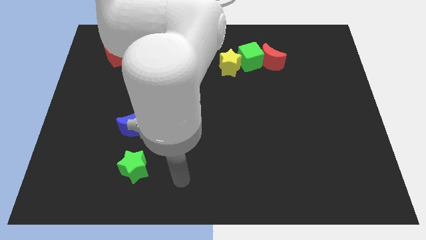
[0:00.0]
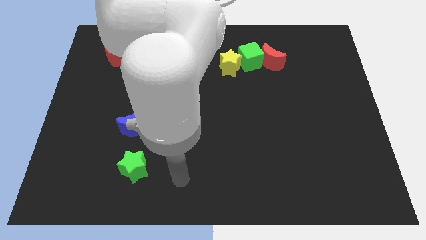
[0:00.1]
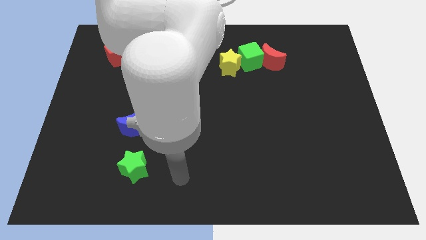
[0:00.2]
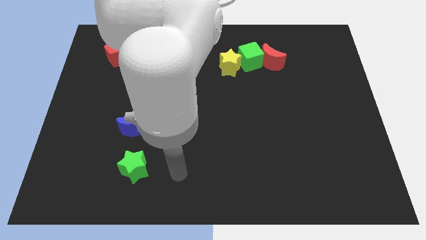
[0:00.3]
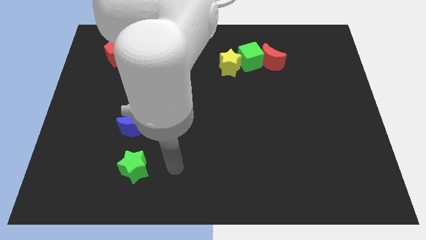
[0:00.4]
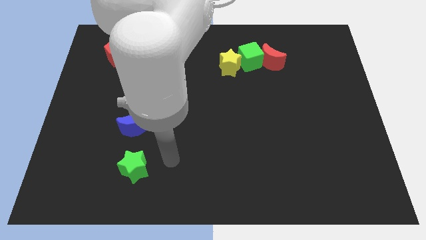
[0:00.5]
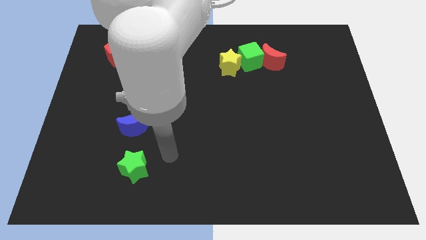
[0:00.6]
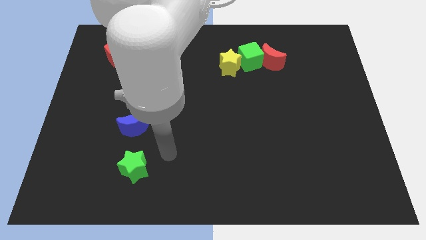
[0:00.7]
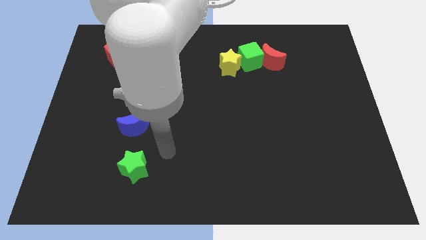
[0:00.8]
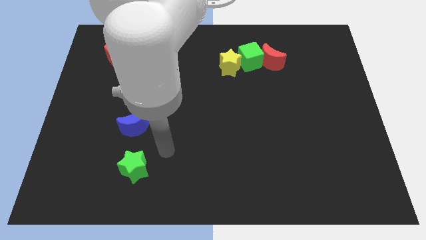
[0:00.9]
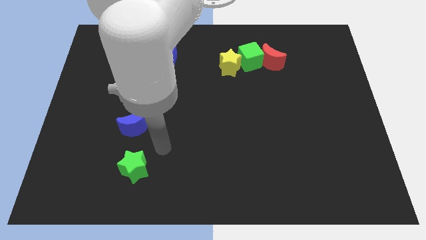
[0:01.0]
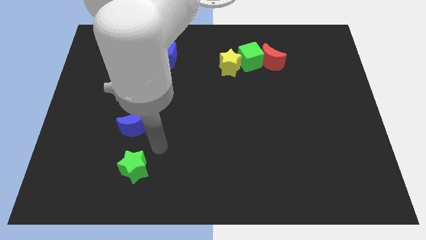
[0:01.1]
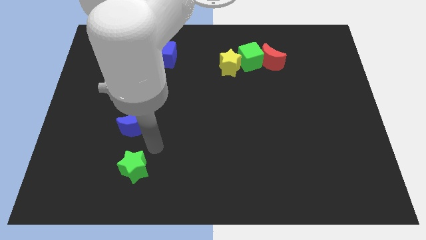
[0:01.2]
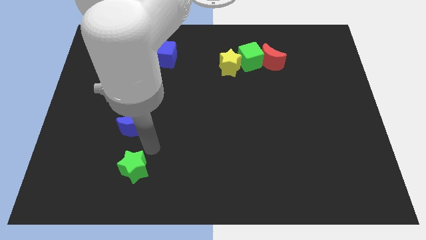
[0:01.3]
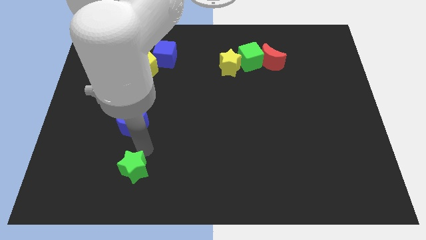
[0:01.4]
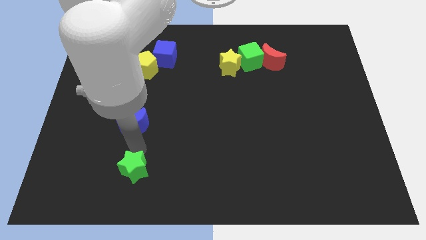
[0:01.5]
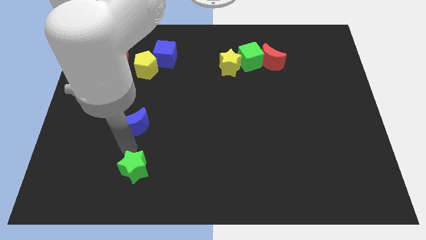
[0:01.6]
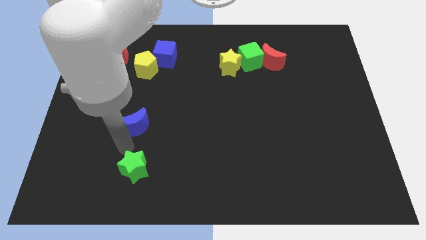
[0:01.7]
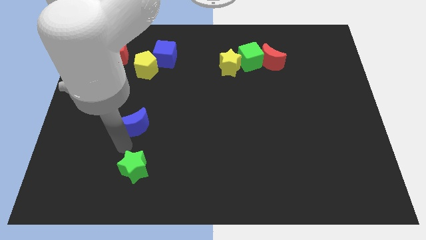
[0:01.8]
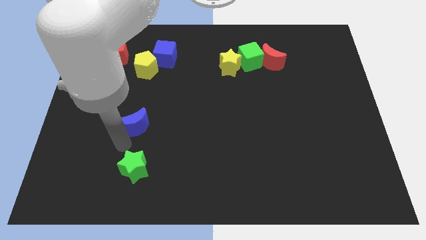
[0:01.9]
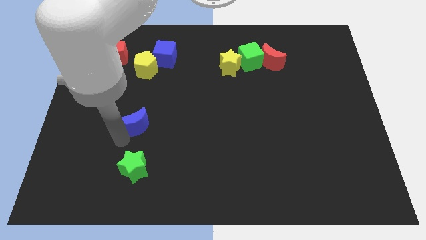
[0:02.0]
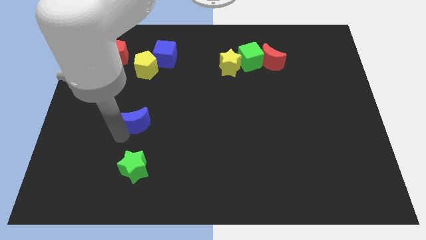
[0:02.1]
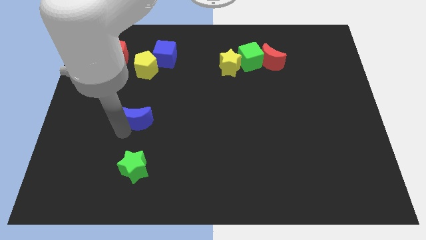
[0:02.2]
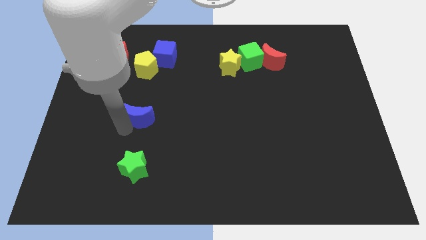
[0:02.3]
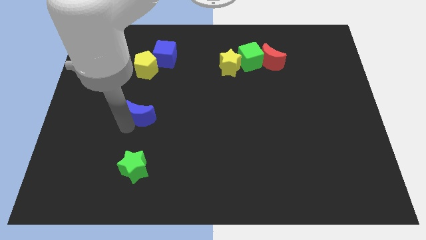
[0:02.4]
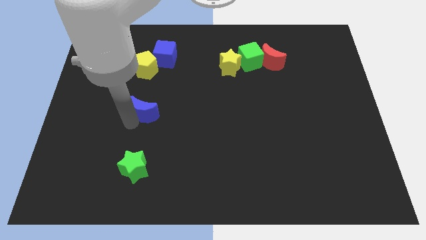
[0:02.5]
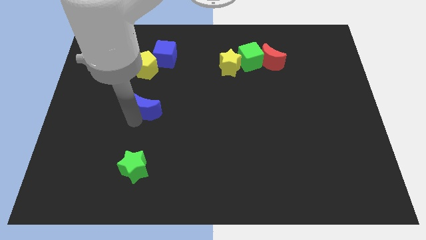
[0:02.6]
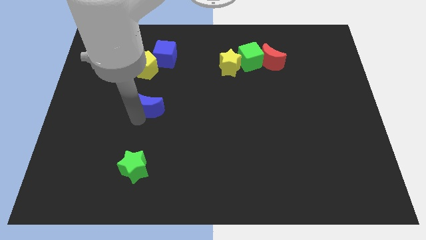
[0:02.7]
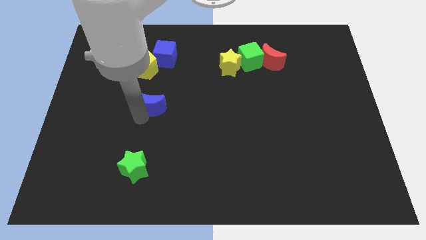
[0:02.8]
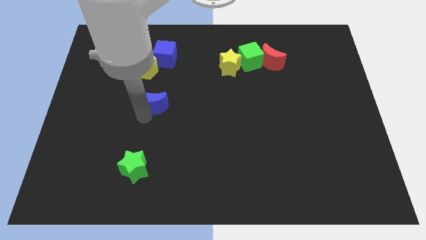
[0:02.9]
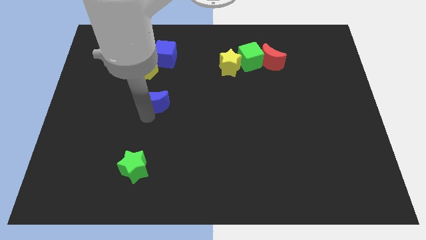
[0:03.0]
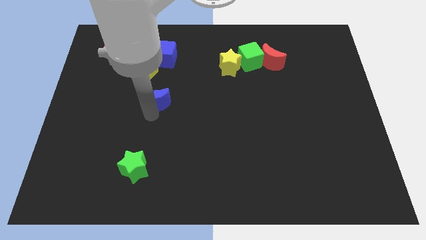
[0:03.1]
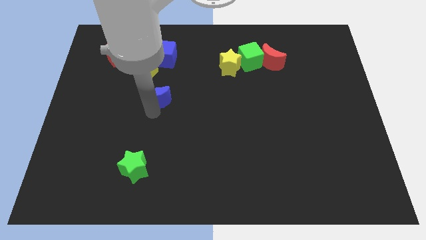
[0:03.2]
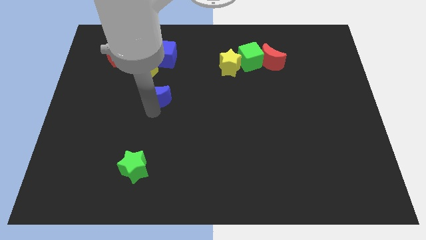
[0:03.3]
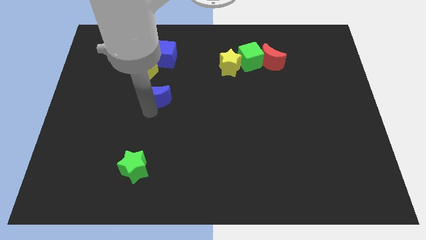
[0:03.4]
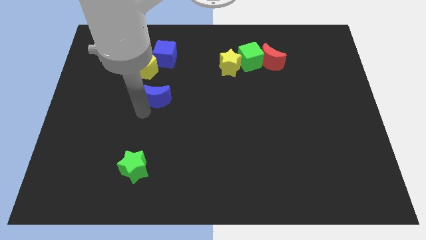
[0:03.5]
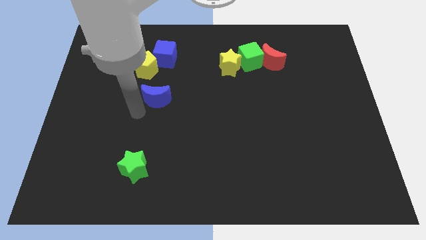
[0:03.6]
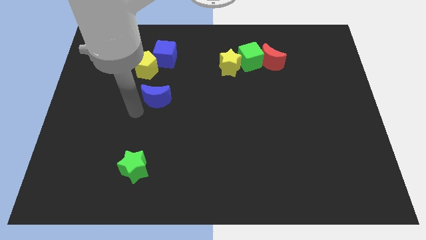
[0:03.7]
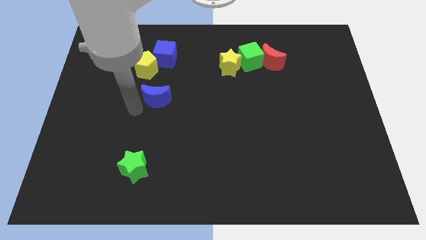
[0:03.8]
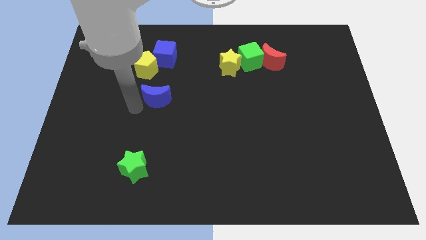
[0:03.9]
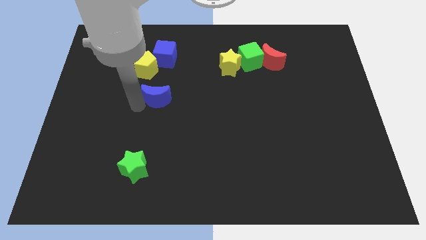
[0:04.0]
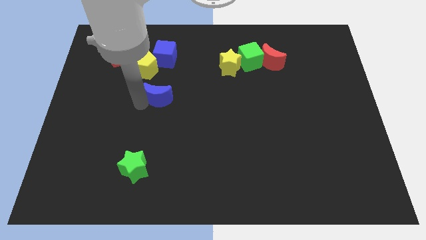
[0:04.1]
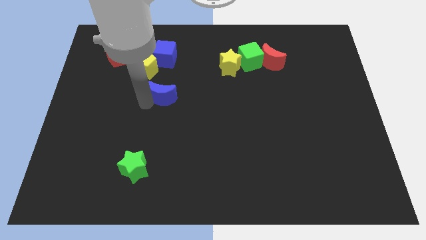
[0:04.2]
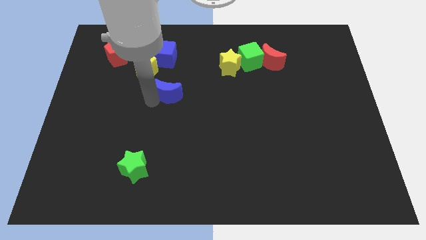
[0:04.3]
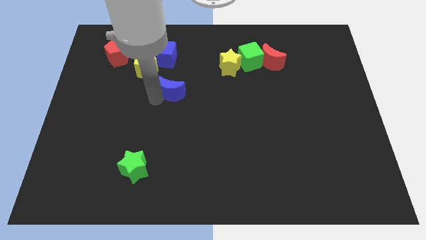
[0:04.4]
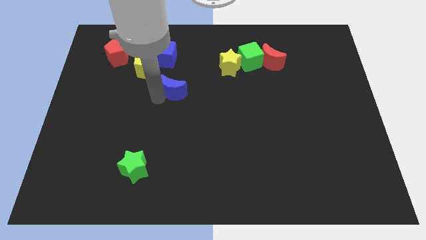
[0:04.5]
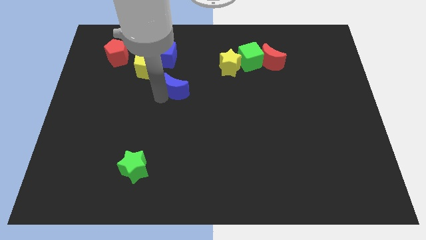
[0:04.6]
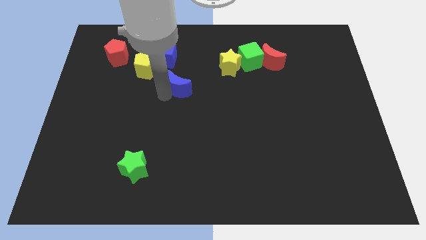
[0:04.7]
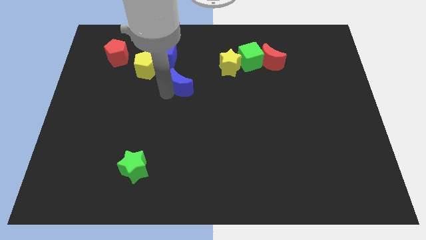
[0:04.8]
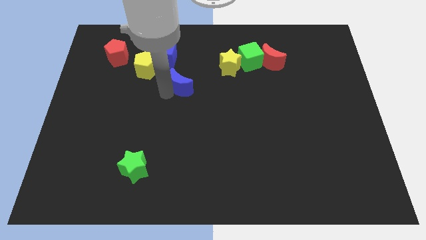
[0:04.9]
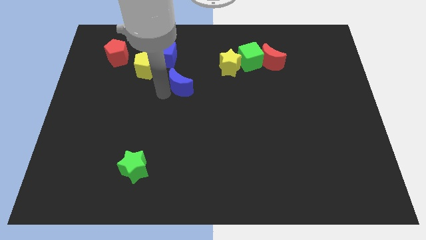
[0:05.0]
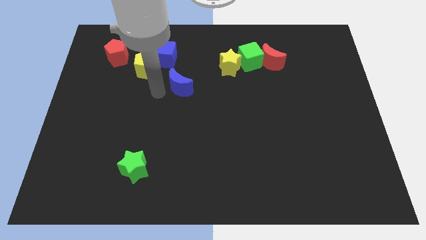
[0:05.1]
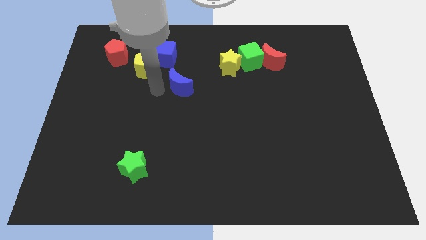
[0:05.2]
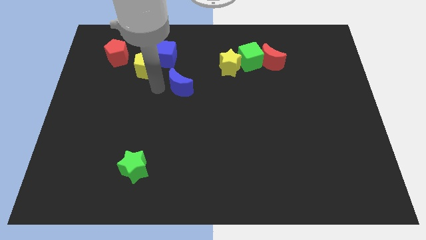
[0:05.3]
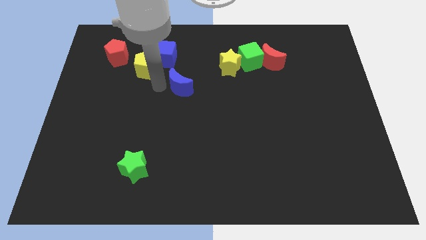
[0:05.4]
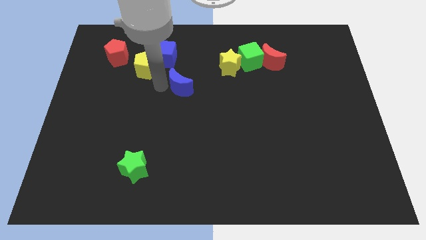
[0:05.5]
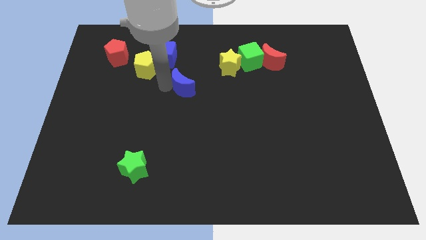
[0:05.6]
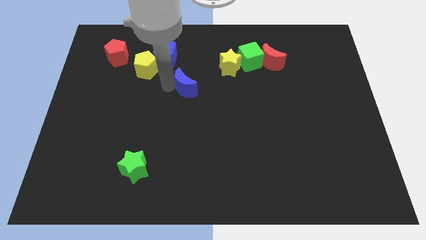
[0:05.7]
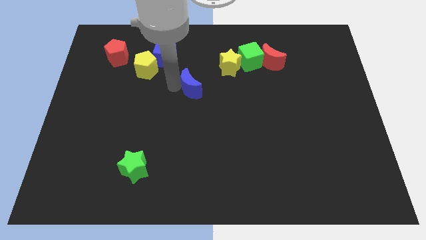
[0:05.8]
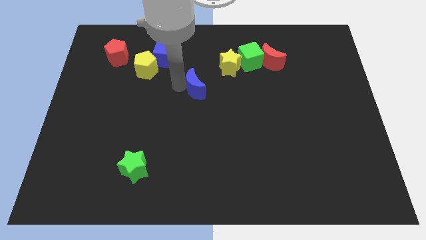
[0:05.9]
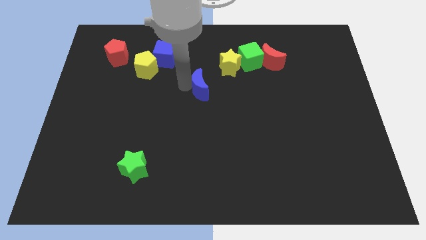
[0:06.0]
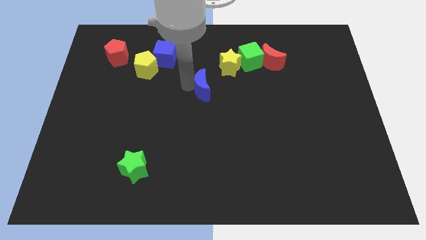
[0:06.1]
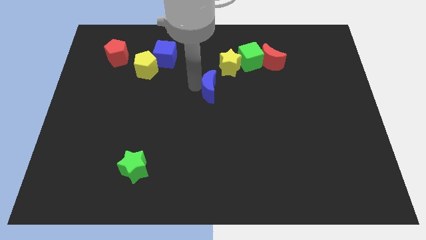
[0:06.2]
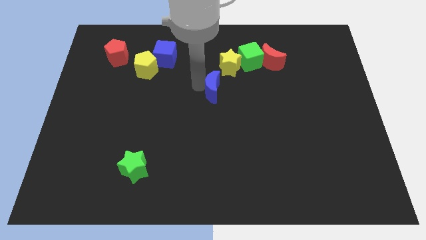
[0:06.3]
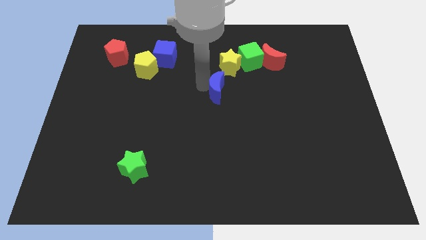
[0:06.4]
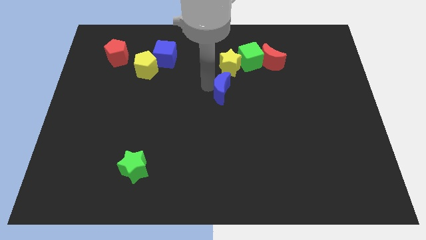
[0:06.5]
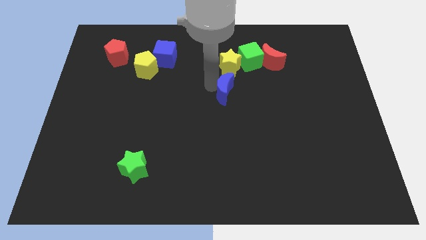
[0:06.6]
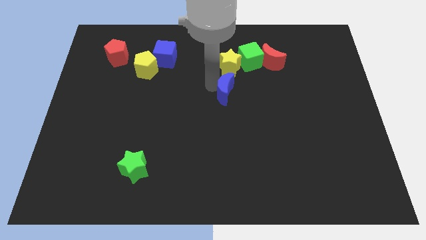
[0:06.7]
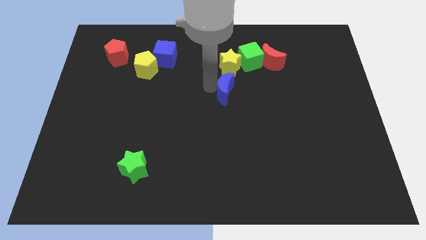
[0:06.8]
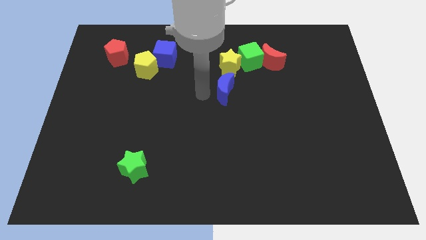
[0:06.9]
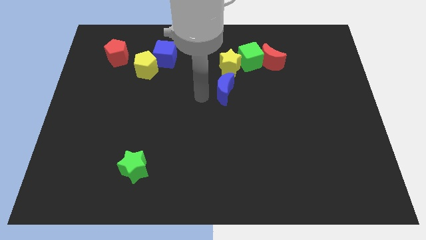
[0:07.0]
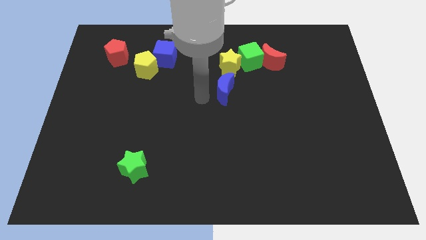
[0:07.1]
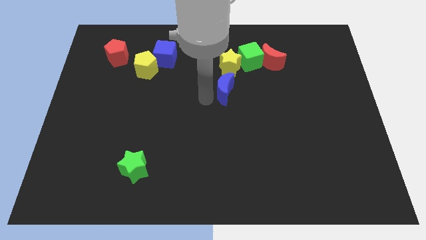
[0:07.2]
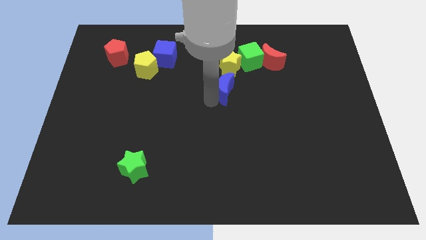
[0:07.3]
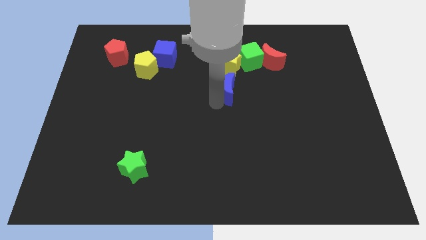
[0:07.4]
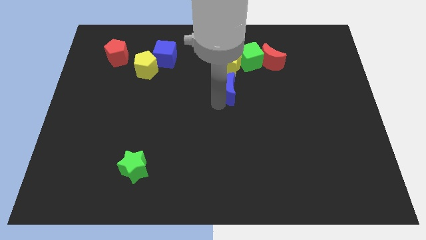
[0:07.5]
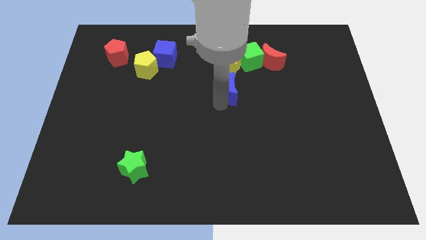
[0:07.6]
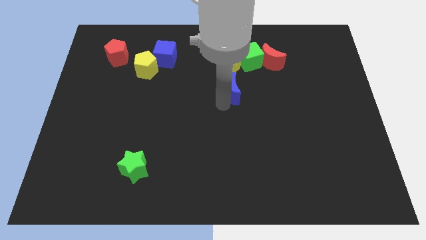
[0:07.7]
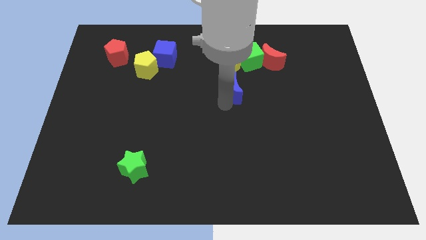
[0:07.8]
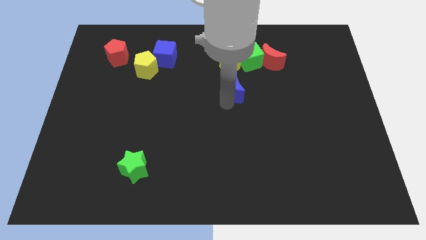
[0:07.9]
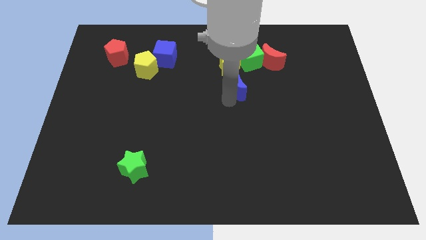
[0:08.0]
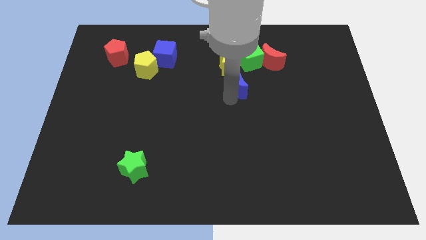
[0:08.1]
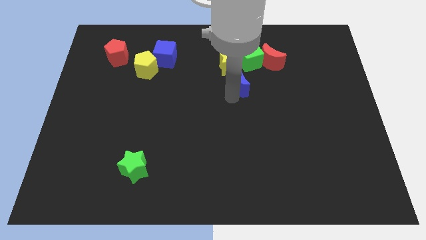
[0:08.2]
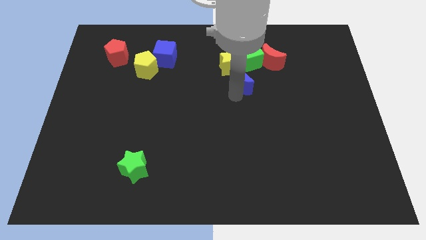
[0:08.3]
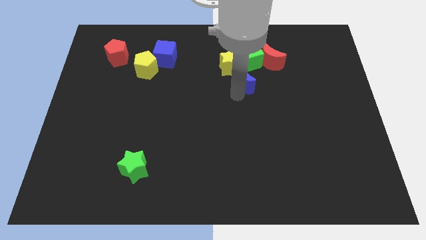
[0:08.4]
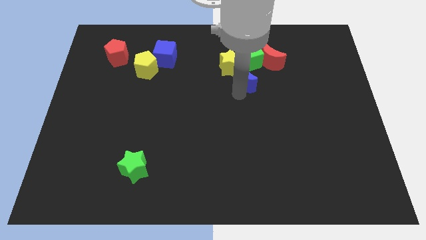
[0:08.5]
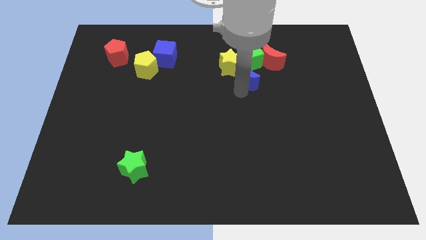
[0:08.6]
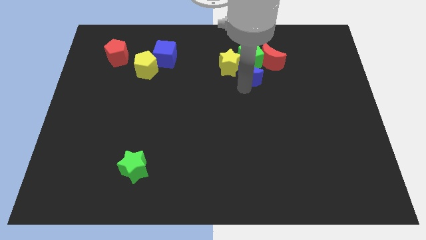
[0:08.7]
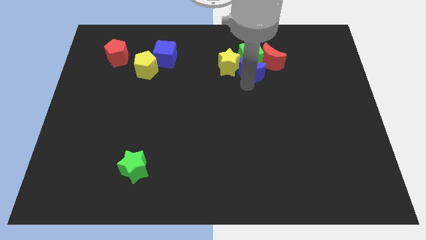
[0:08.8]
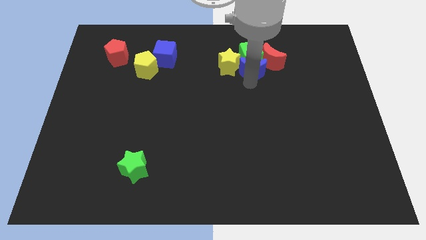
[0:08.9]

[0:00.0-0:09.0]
push the blue moon next to the green cube
